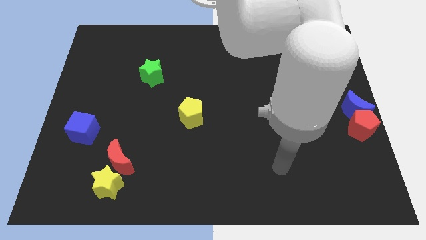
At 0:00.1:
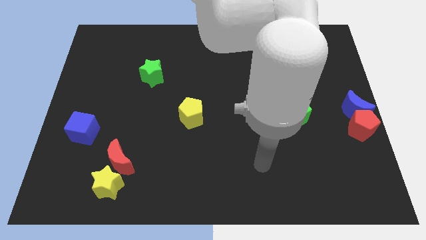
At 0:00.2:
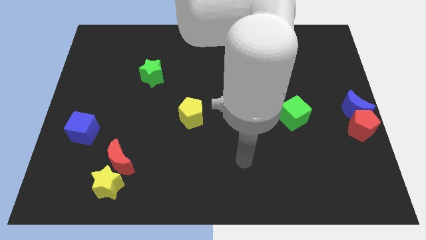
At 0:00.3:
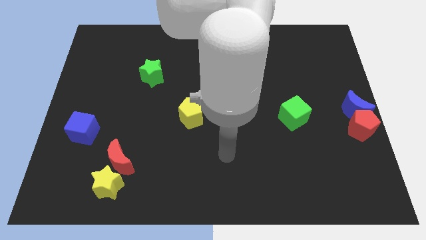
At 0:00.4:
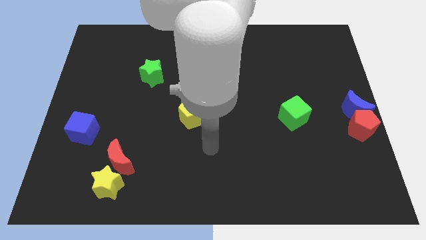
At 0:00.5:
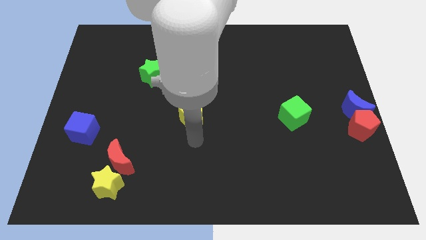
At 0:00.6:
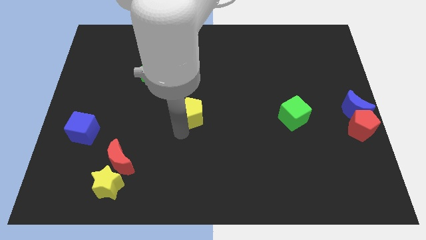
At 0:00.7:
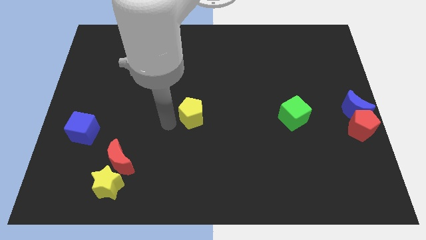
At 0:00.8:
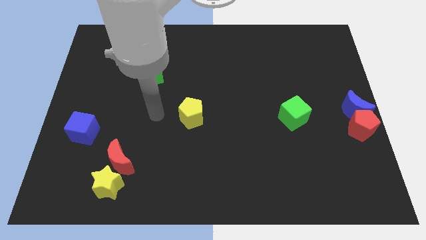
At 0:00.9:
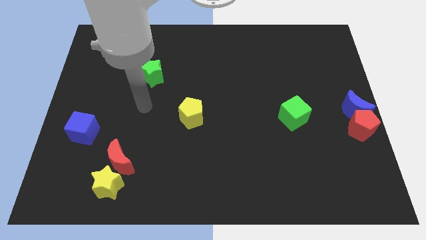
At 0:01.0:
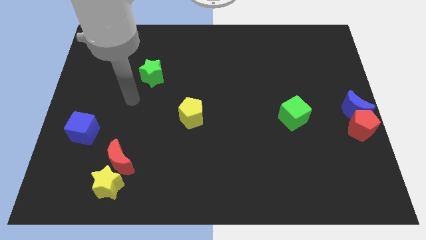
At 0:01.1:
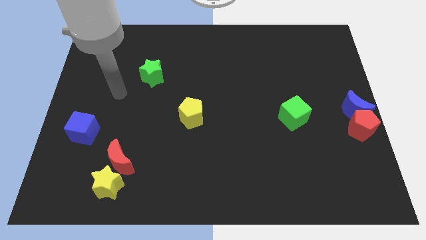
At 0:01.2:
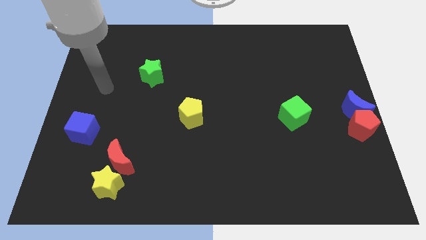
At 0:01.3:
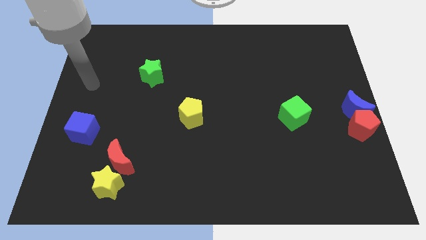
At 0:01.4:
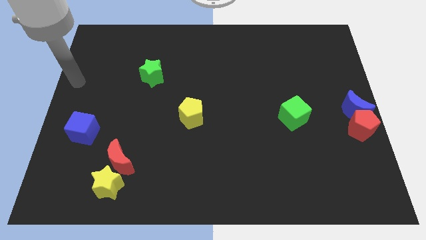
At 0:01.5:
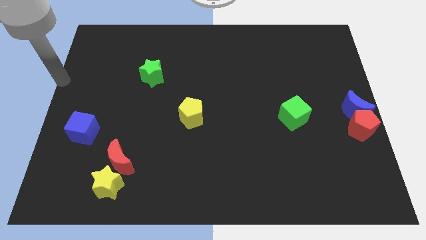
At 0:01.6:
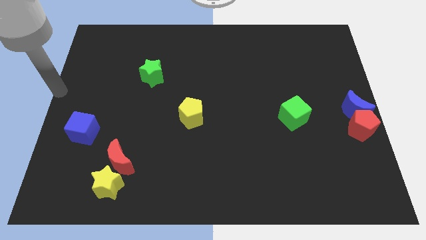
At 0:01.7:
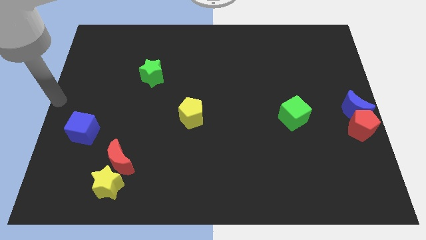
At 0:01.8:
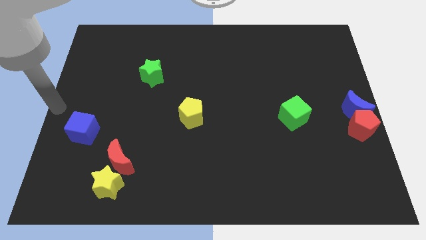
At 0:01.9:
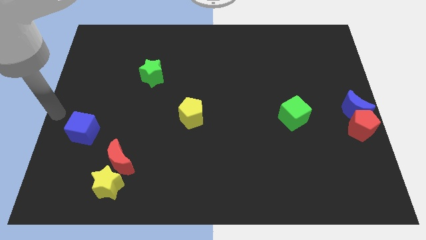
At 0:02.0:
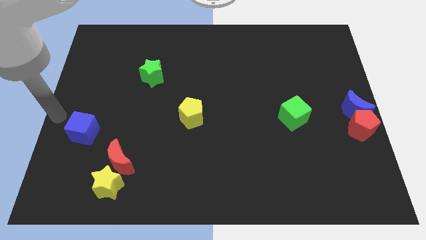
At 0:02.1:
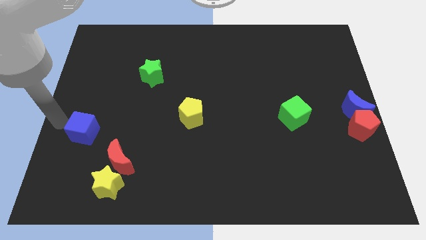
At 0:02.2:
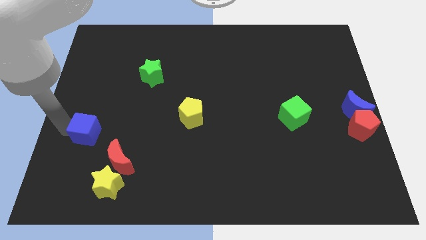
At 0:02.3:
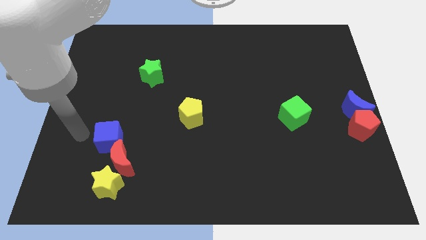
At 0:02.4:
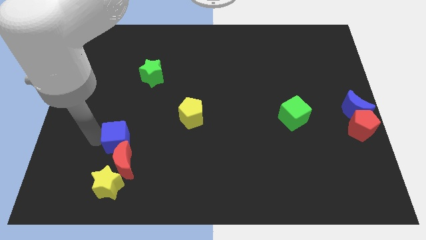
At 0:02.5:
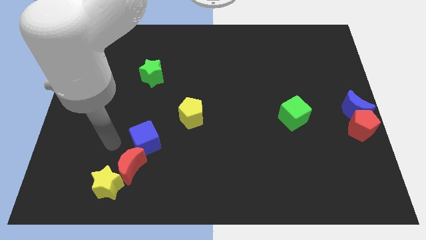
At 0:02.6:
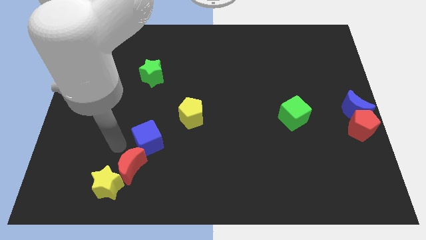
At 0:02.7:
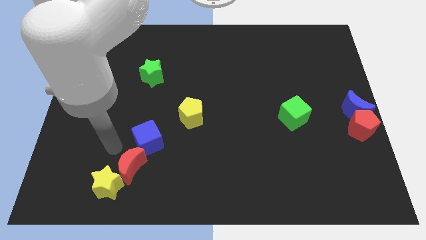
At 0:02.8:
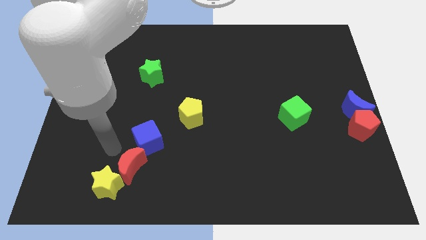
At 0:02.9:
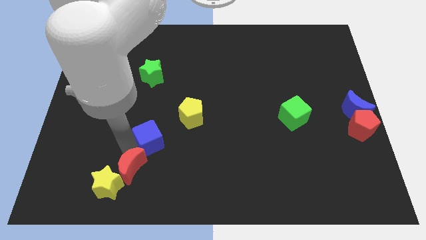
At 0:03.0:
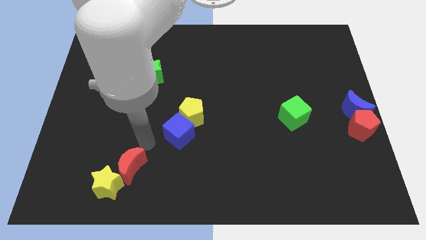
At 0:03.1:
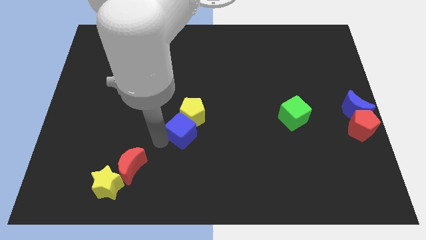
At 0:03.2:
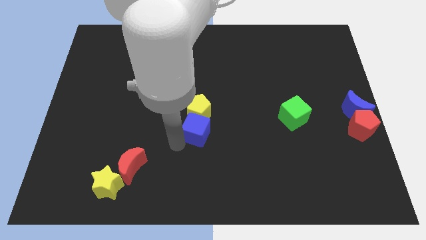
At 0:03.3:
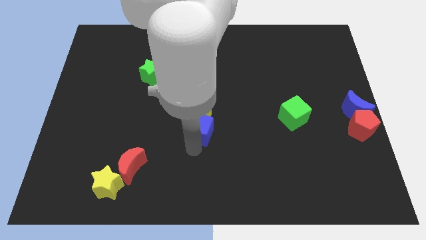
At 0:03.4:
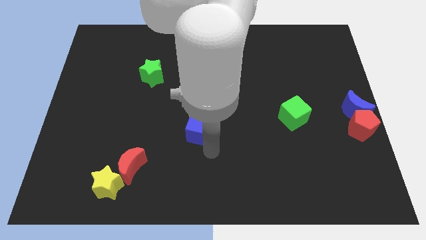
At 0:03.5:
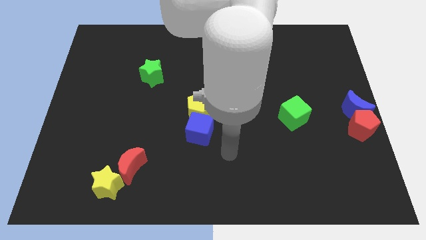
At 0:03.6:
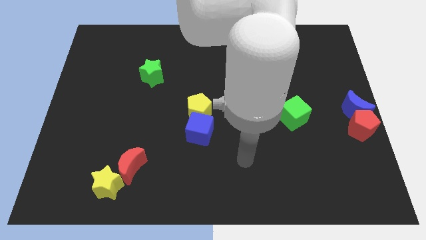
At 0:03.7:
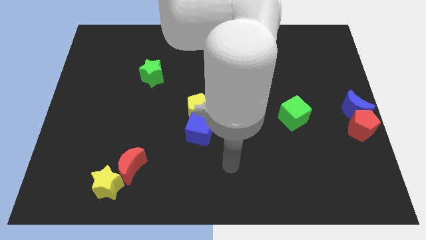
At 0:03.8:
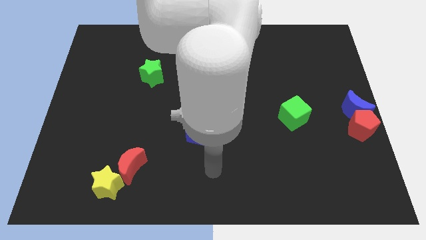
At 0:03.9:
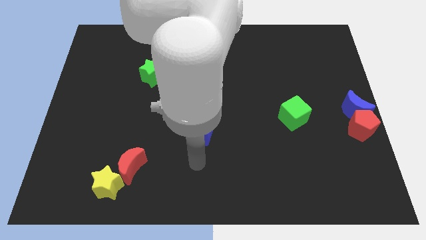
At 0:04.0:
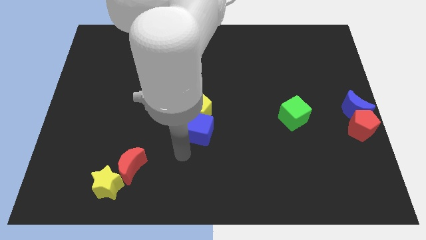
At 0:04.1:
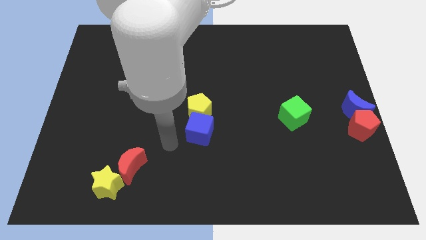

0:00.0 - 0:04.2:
push the blue cube into the yellow pentagon

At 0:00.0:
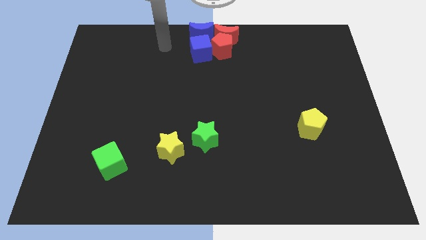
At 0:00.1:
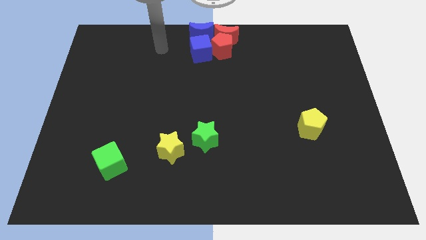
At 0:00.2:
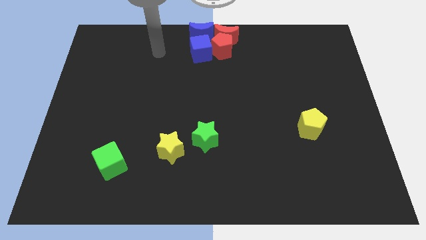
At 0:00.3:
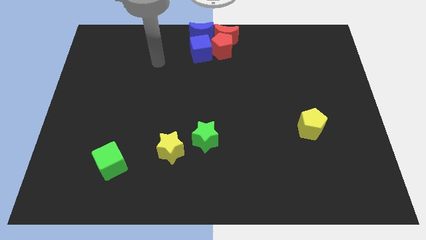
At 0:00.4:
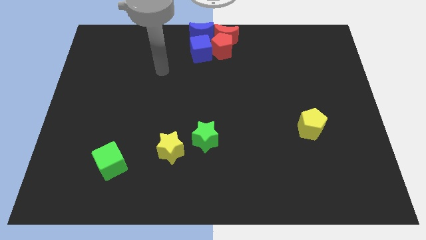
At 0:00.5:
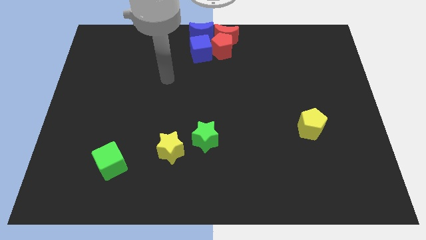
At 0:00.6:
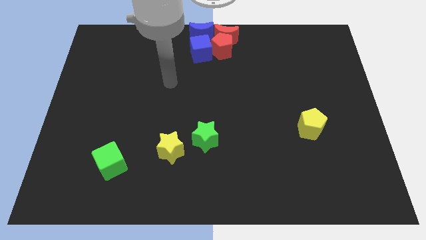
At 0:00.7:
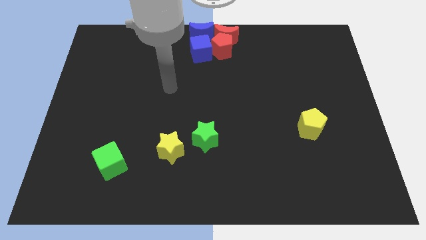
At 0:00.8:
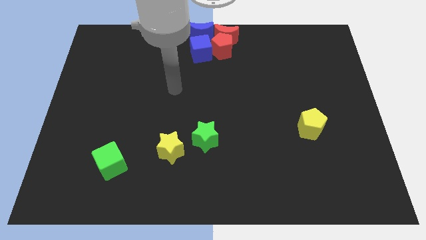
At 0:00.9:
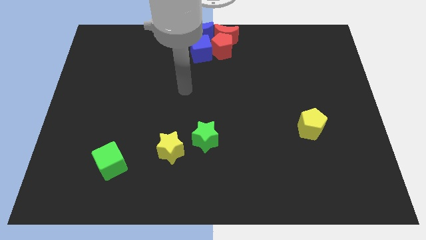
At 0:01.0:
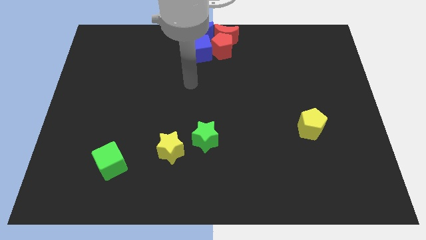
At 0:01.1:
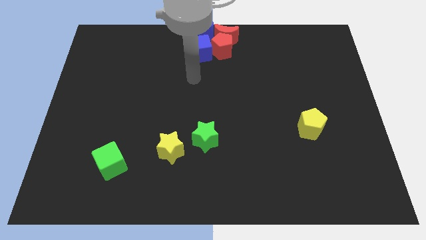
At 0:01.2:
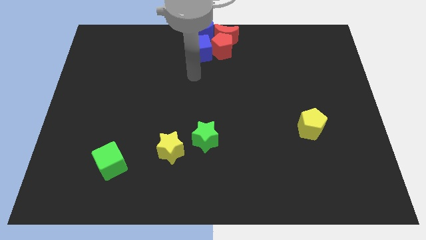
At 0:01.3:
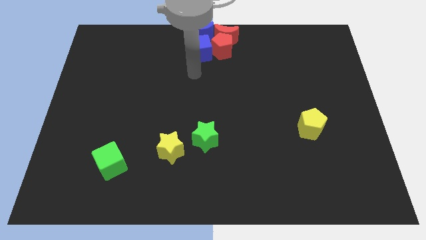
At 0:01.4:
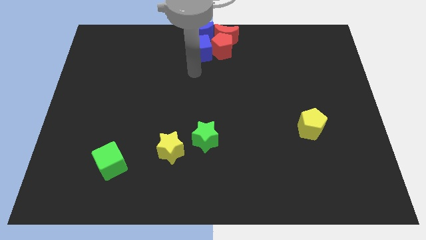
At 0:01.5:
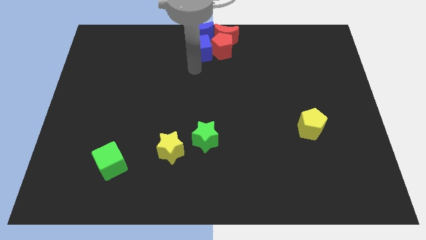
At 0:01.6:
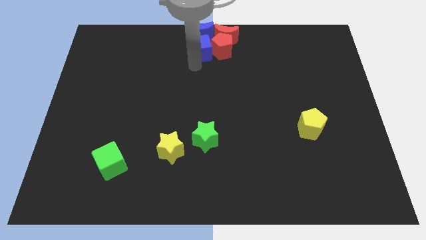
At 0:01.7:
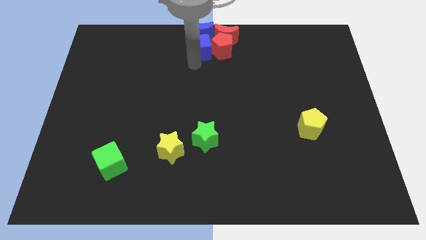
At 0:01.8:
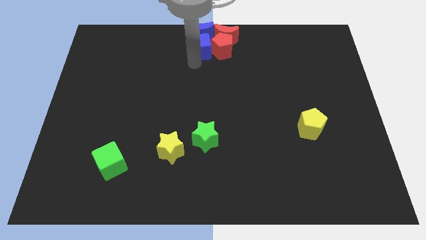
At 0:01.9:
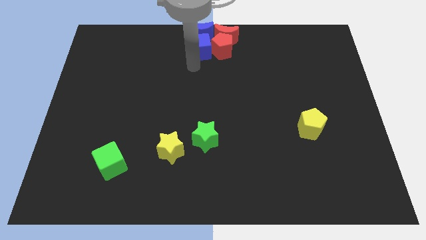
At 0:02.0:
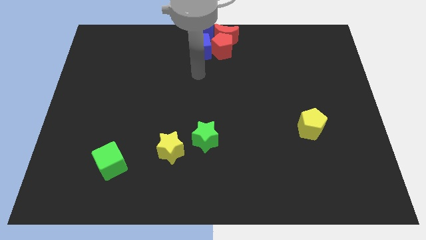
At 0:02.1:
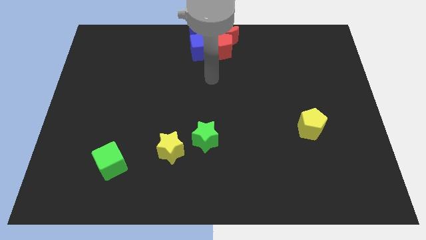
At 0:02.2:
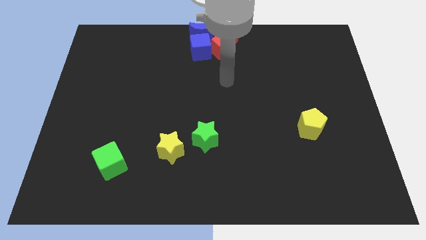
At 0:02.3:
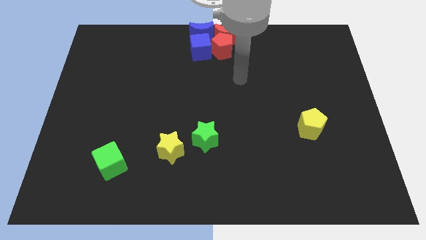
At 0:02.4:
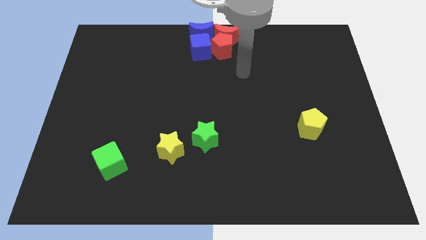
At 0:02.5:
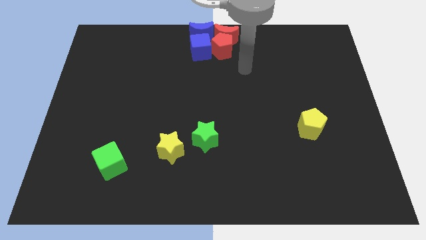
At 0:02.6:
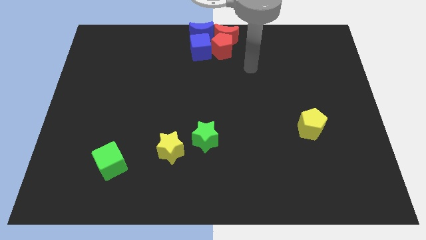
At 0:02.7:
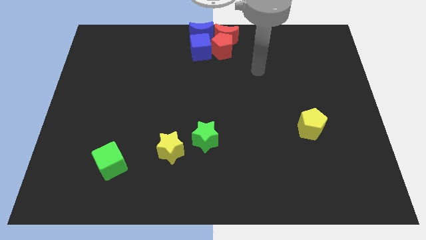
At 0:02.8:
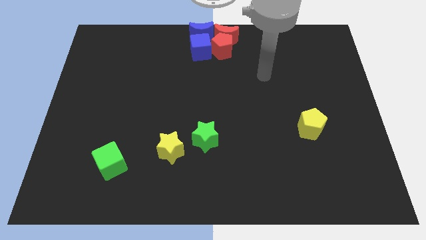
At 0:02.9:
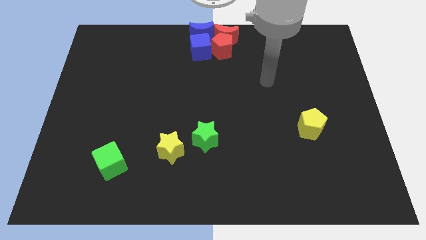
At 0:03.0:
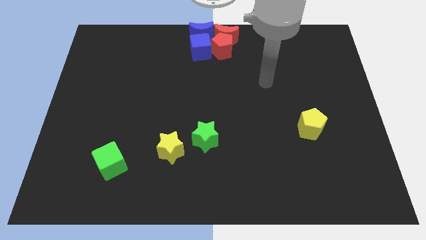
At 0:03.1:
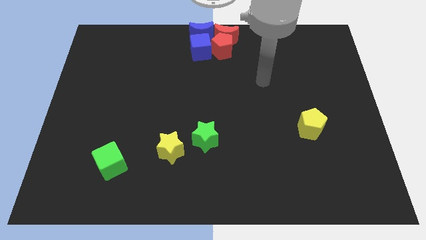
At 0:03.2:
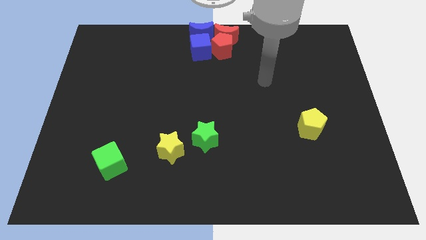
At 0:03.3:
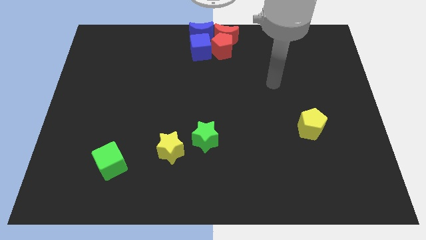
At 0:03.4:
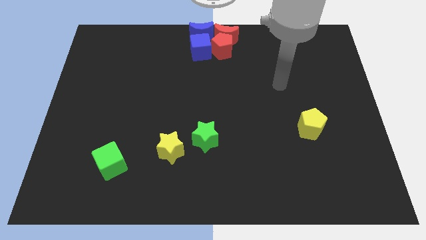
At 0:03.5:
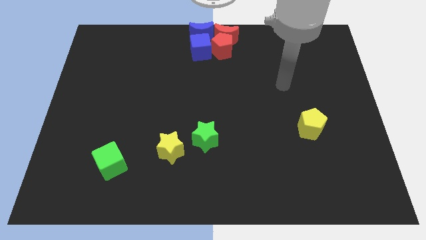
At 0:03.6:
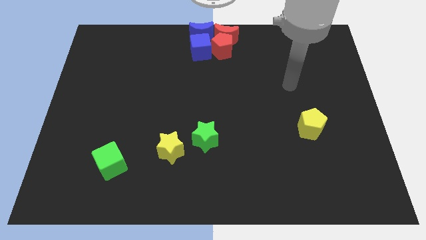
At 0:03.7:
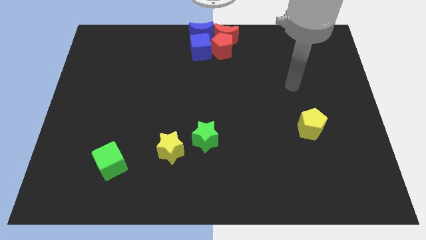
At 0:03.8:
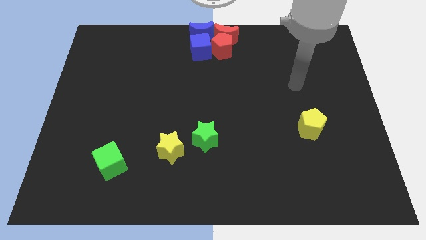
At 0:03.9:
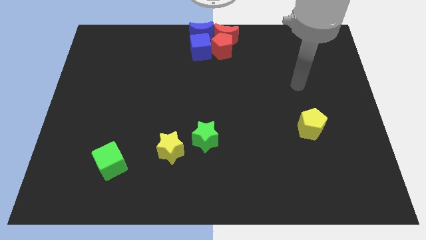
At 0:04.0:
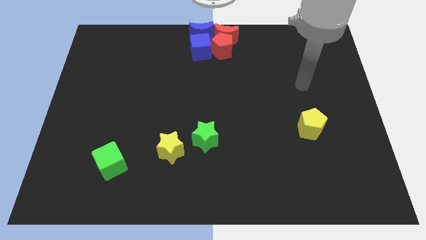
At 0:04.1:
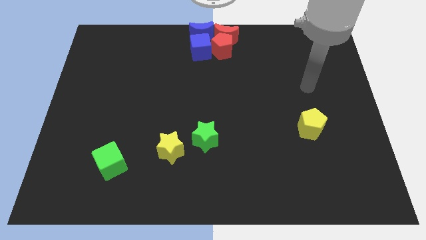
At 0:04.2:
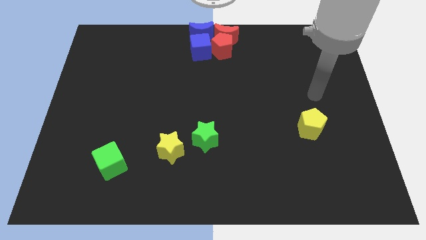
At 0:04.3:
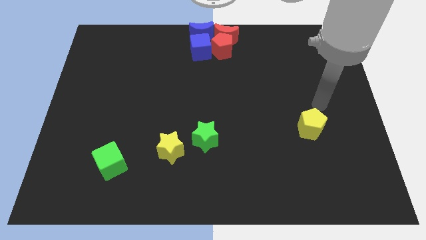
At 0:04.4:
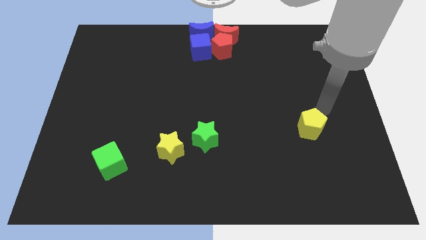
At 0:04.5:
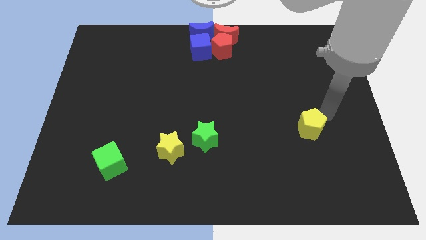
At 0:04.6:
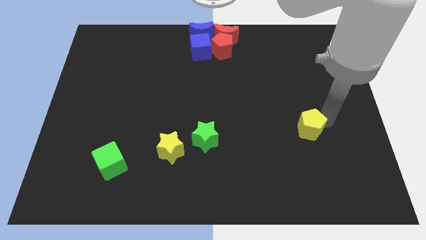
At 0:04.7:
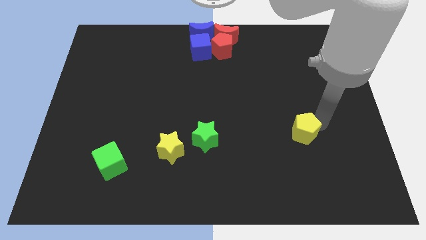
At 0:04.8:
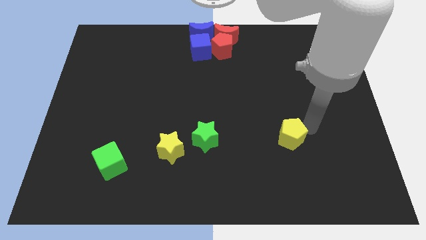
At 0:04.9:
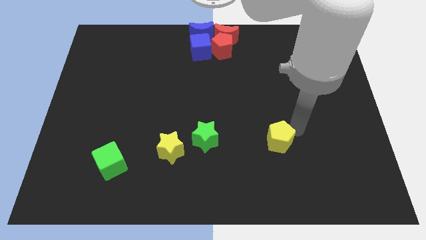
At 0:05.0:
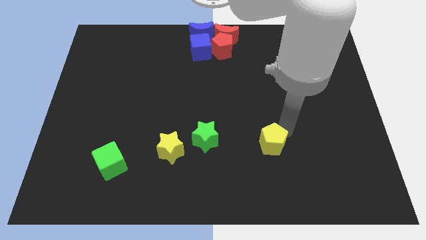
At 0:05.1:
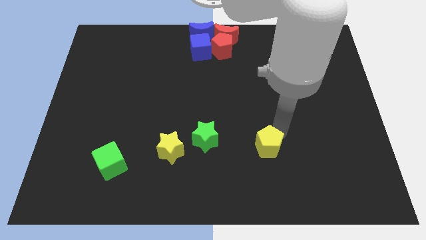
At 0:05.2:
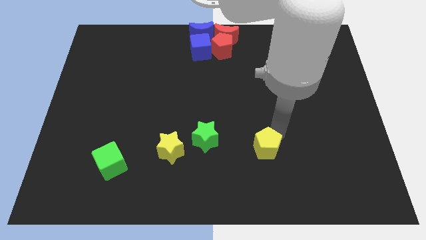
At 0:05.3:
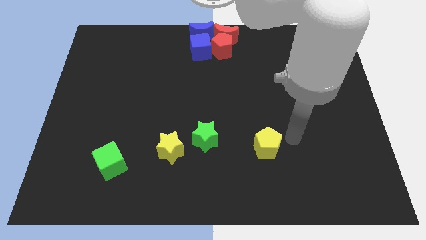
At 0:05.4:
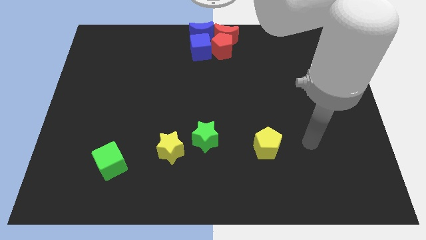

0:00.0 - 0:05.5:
push the yellow pentagon towards the left
